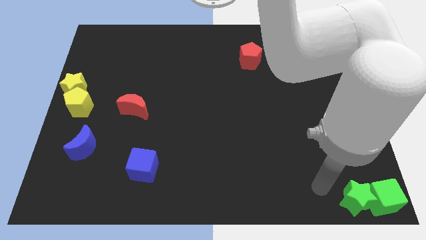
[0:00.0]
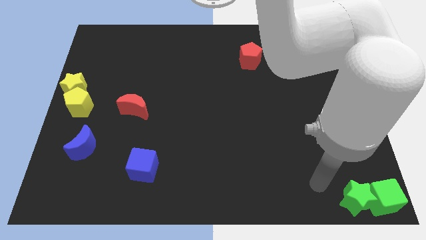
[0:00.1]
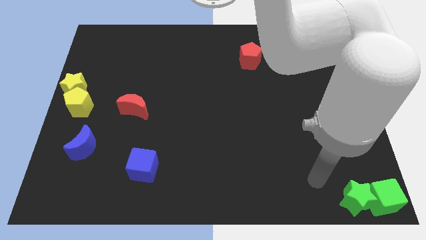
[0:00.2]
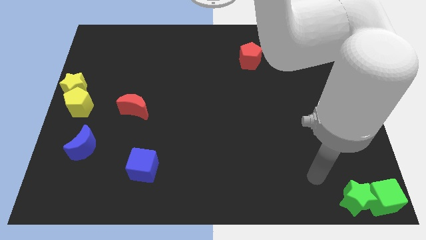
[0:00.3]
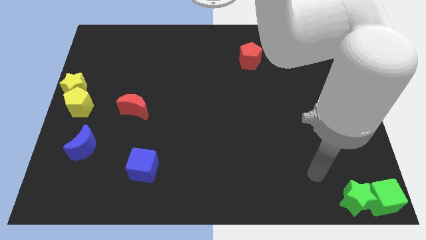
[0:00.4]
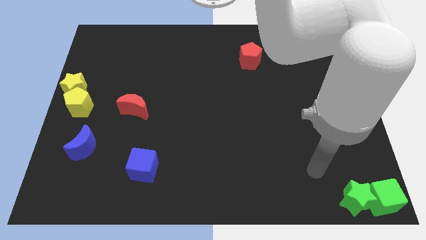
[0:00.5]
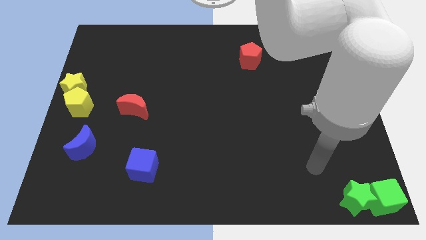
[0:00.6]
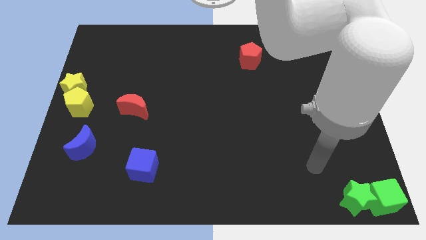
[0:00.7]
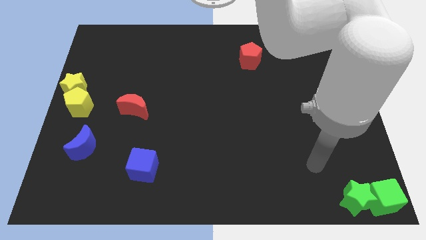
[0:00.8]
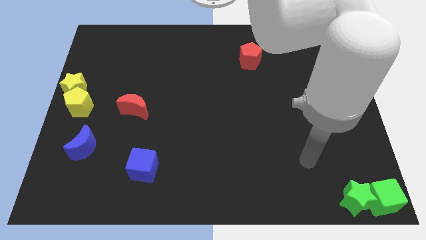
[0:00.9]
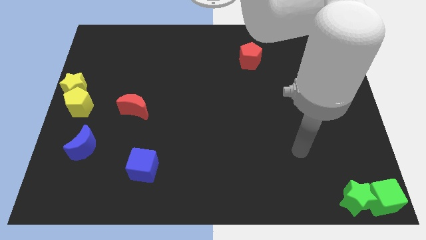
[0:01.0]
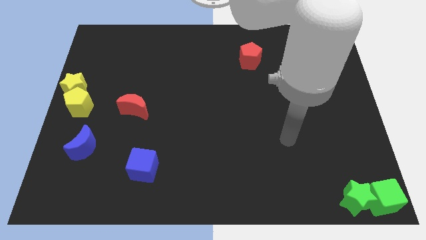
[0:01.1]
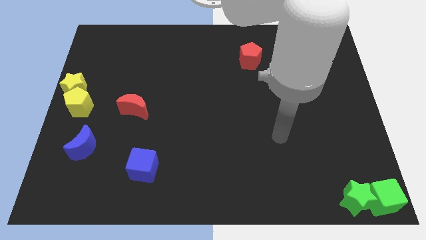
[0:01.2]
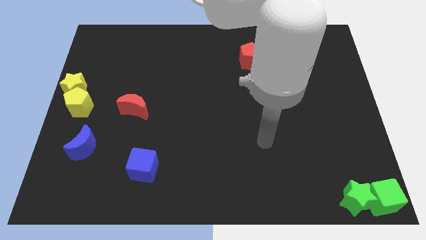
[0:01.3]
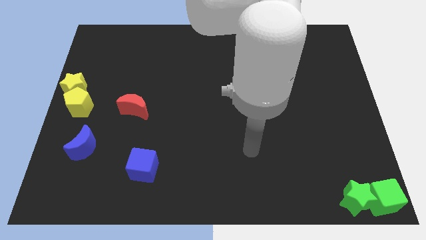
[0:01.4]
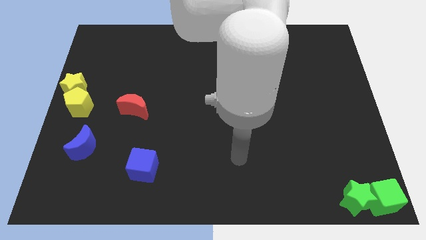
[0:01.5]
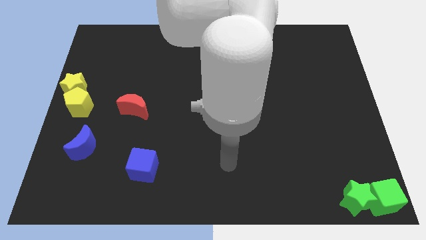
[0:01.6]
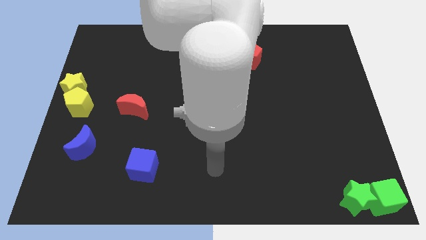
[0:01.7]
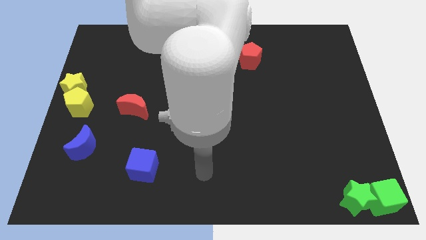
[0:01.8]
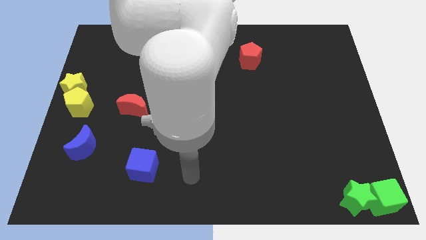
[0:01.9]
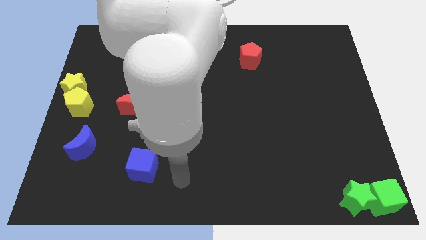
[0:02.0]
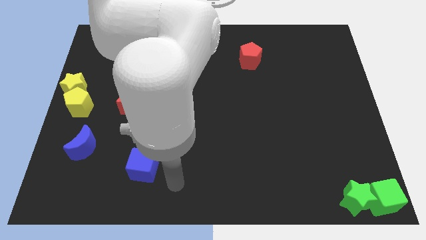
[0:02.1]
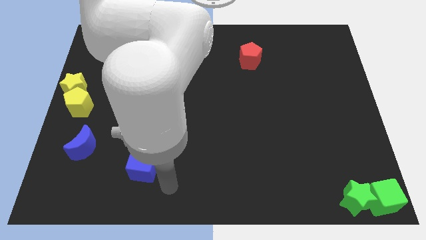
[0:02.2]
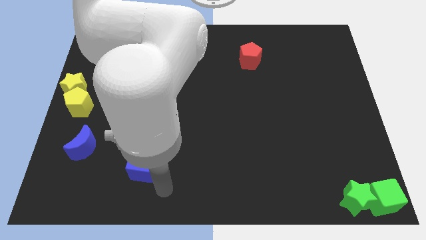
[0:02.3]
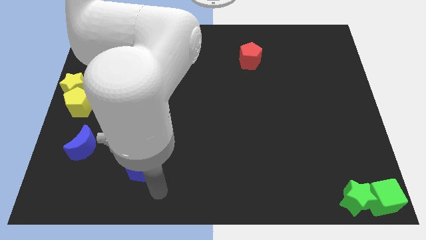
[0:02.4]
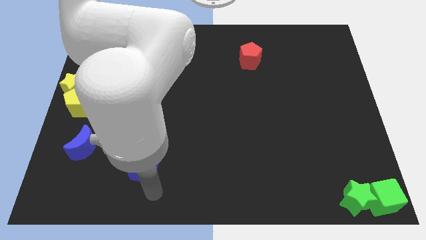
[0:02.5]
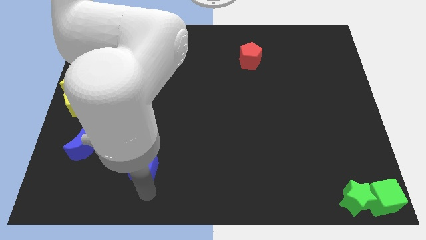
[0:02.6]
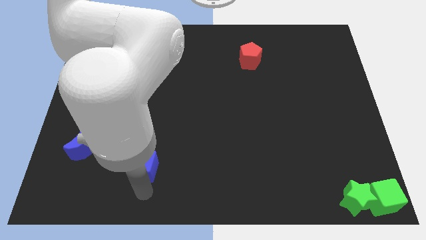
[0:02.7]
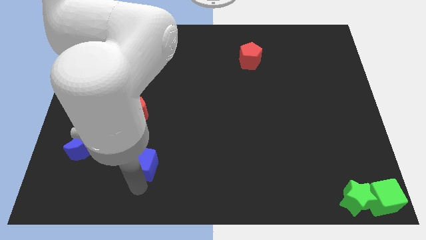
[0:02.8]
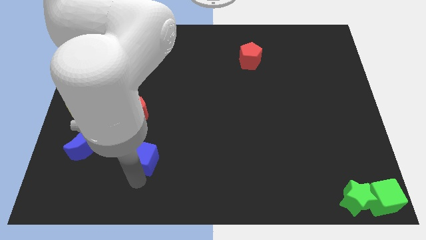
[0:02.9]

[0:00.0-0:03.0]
move your arm into the blue cube

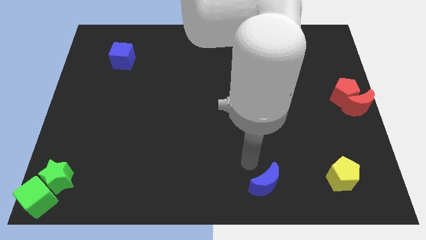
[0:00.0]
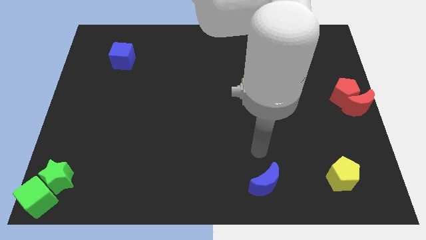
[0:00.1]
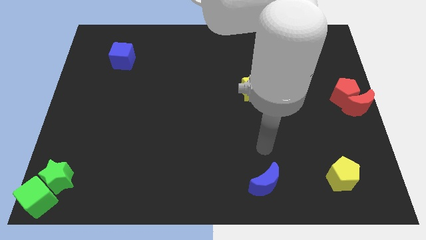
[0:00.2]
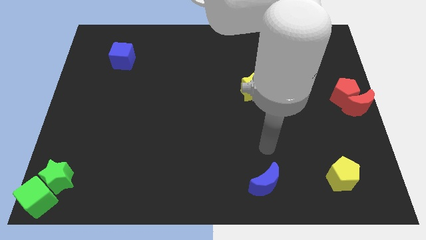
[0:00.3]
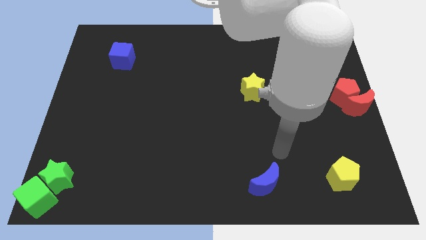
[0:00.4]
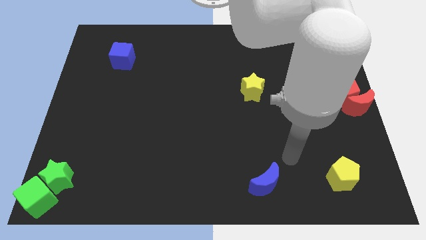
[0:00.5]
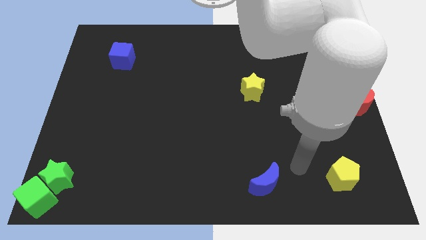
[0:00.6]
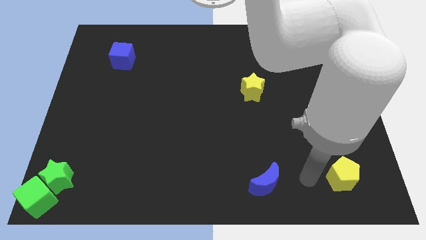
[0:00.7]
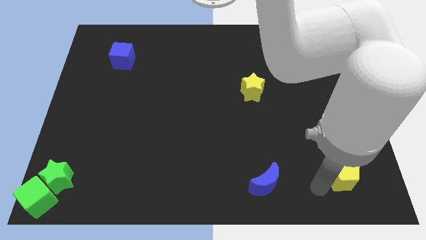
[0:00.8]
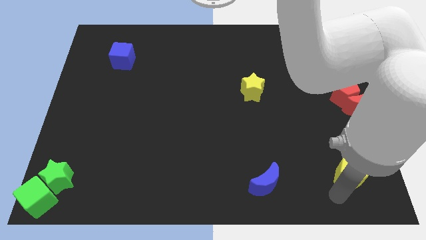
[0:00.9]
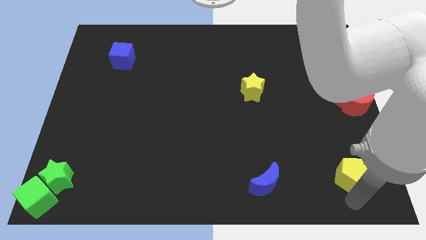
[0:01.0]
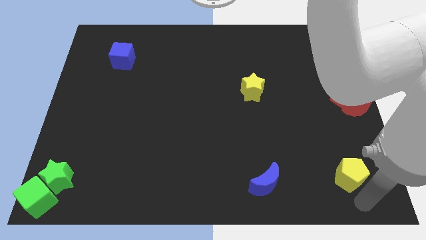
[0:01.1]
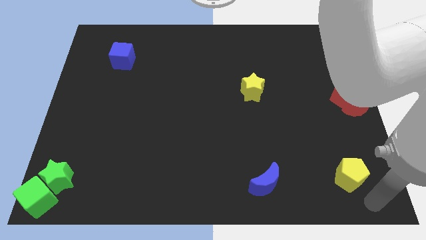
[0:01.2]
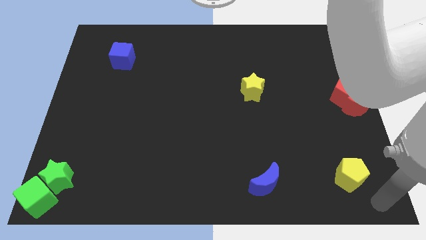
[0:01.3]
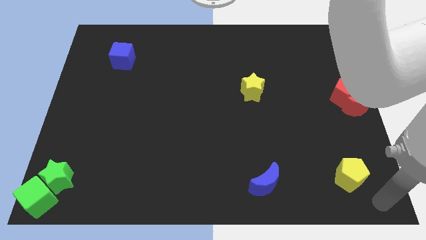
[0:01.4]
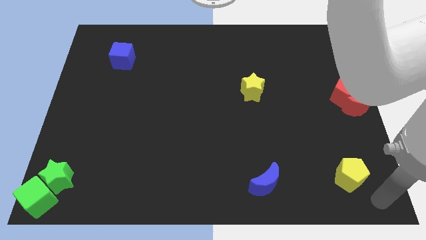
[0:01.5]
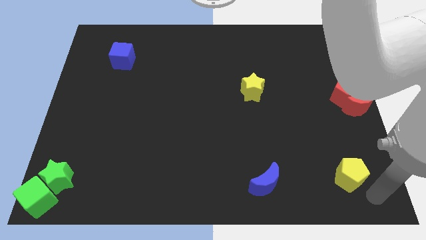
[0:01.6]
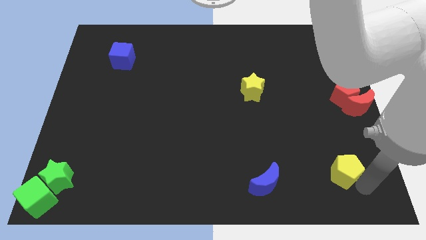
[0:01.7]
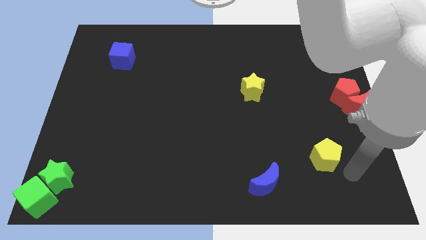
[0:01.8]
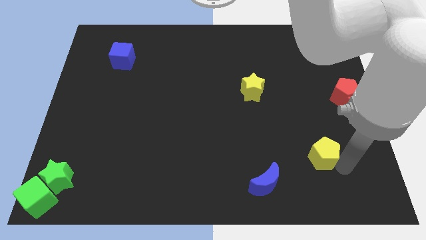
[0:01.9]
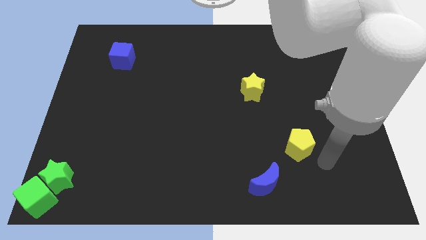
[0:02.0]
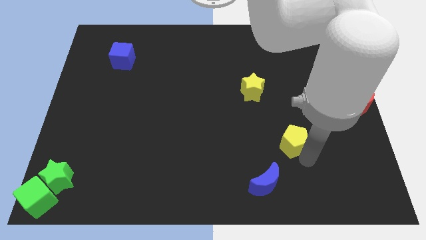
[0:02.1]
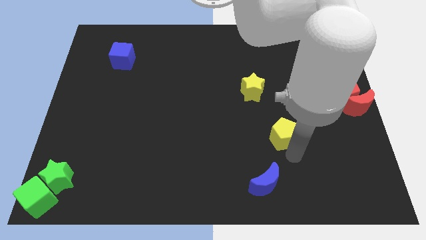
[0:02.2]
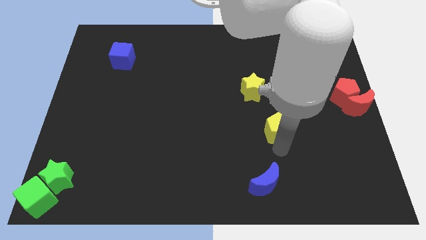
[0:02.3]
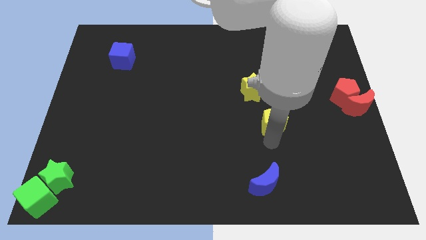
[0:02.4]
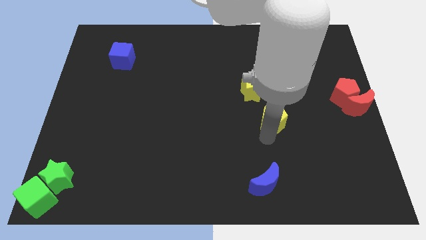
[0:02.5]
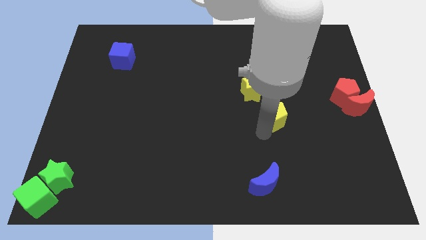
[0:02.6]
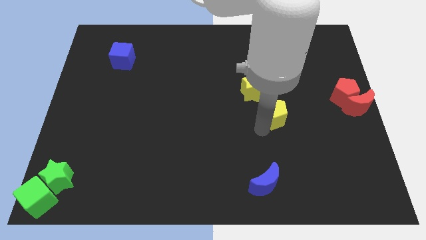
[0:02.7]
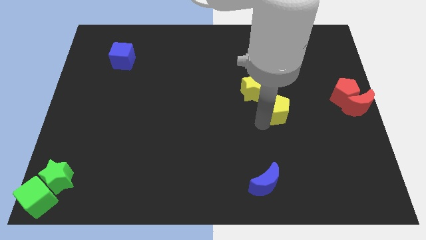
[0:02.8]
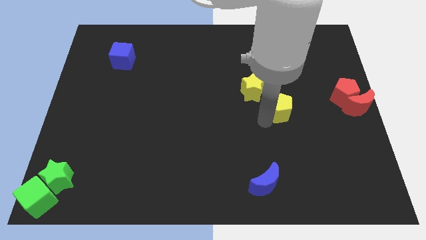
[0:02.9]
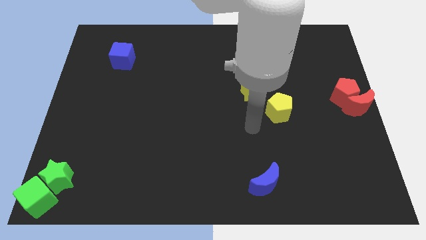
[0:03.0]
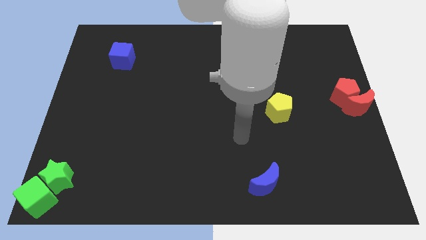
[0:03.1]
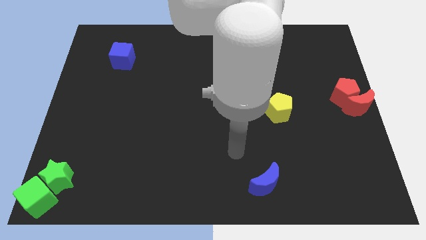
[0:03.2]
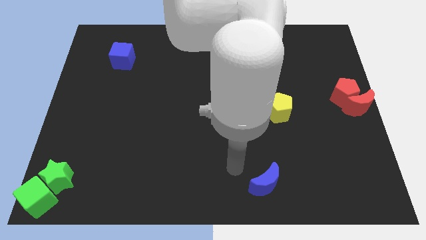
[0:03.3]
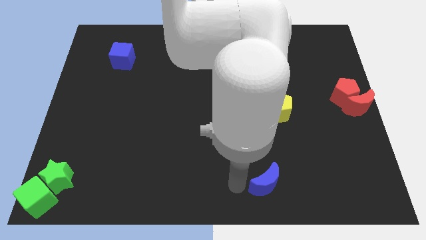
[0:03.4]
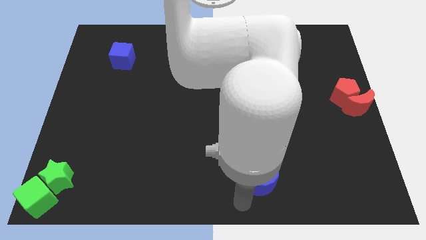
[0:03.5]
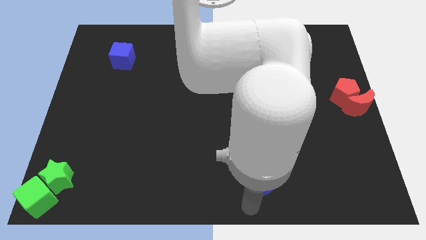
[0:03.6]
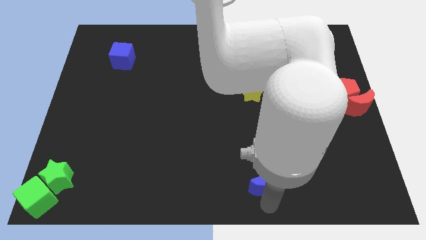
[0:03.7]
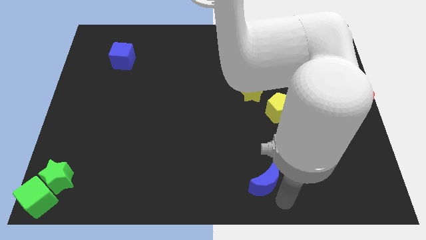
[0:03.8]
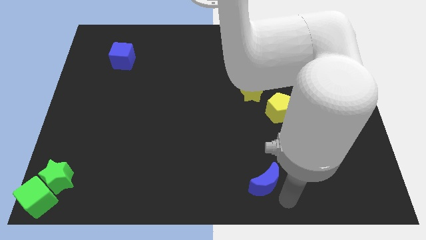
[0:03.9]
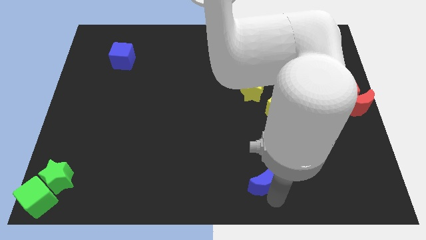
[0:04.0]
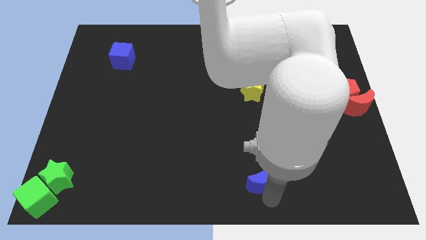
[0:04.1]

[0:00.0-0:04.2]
push the yellow pentagon close to the yellow star

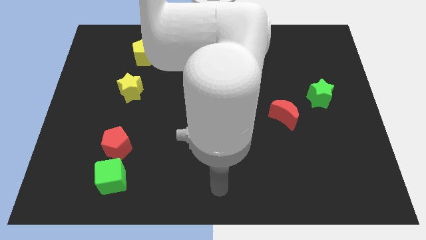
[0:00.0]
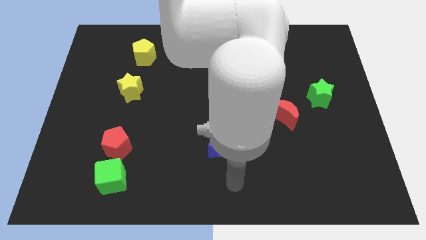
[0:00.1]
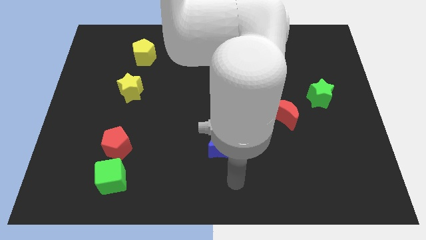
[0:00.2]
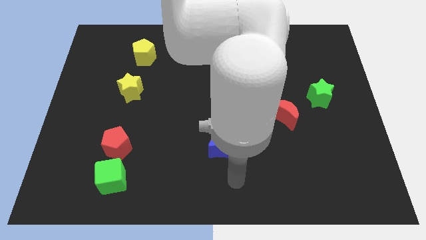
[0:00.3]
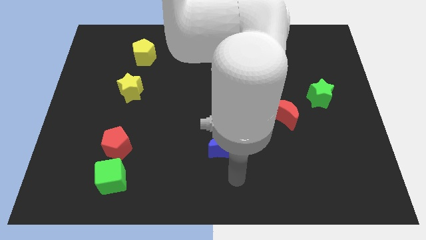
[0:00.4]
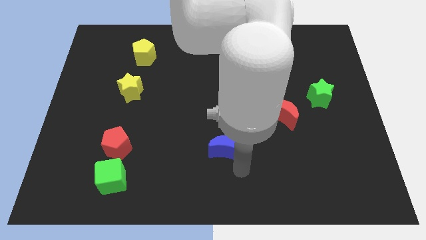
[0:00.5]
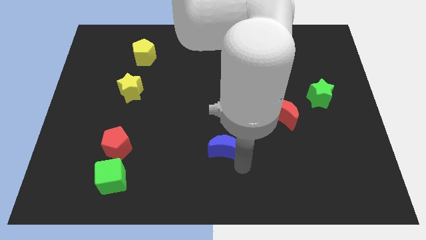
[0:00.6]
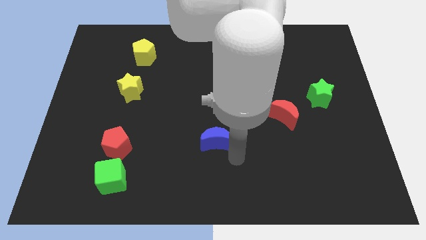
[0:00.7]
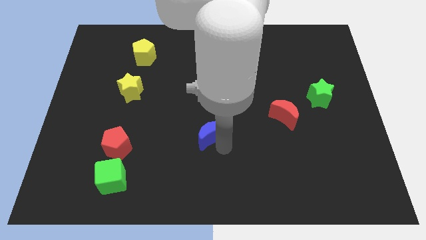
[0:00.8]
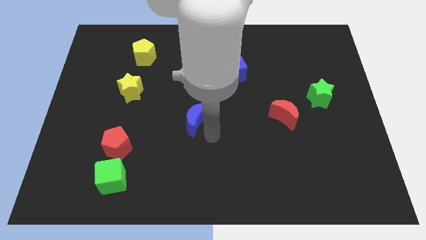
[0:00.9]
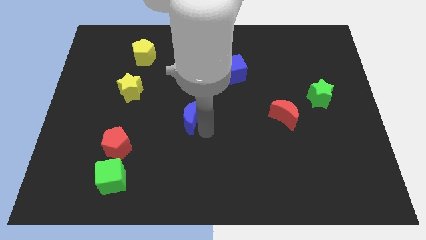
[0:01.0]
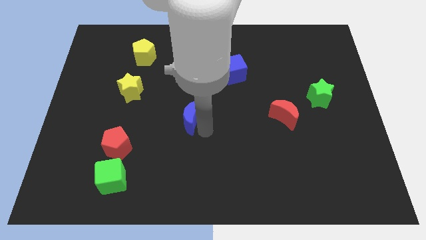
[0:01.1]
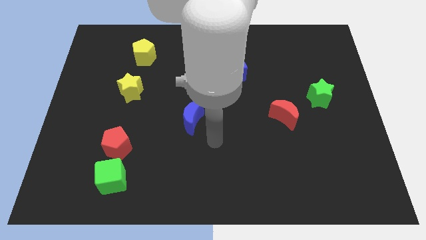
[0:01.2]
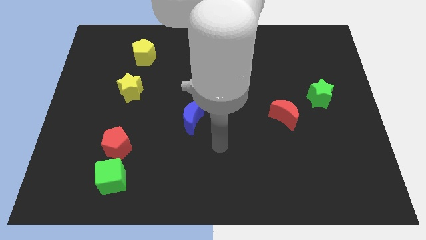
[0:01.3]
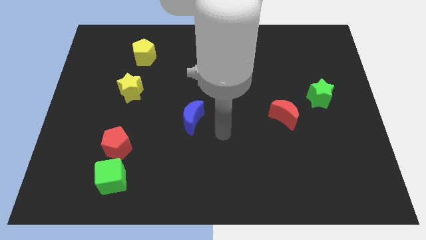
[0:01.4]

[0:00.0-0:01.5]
slide the blue moon diagonally to the top right of the red pentagon

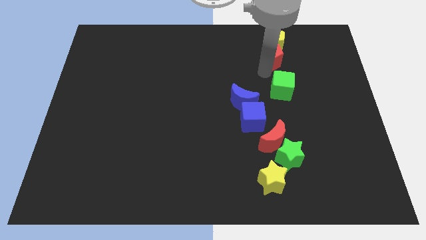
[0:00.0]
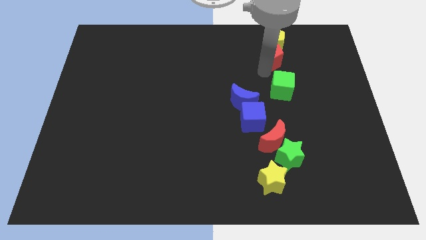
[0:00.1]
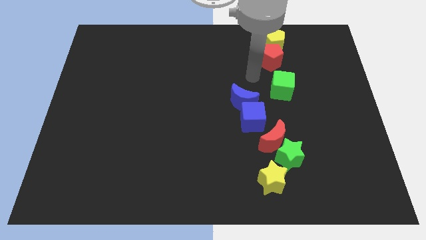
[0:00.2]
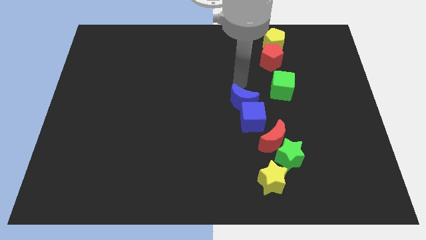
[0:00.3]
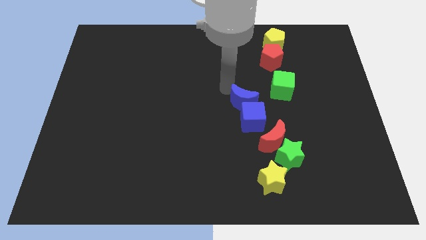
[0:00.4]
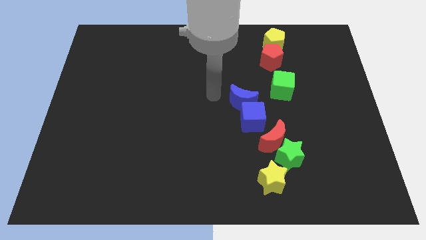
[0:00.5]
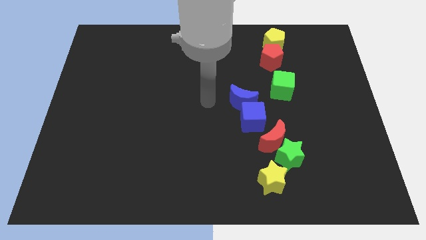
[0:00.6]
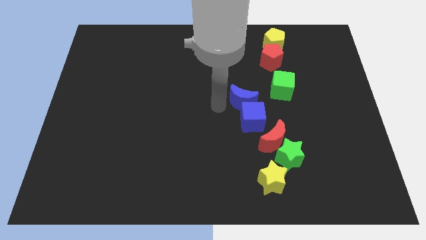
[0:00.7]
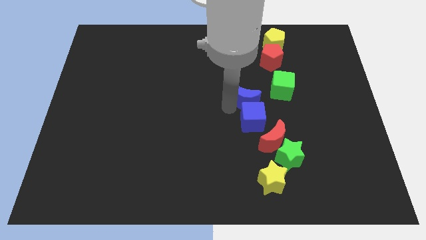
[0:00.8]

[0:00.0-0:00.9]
push the blue moon into the green cube
